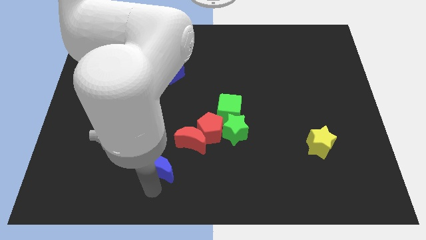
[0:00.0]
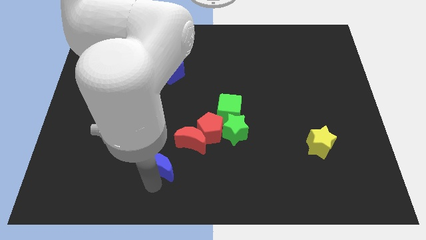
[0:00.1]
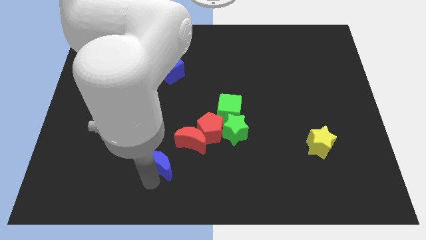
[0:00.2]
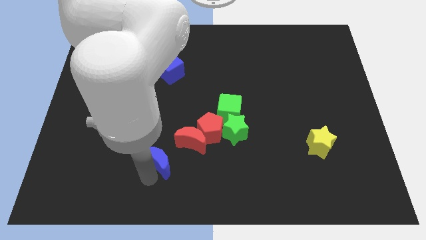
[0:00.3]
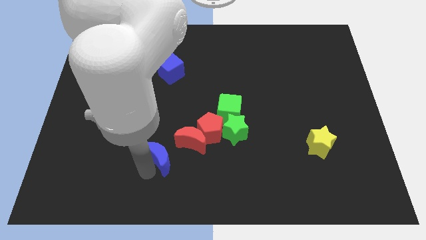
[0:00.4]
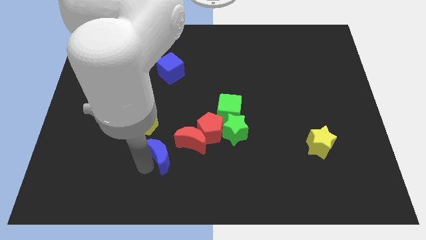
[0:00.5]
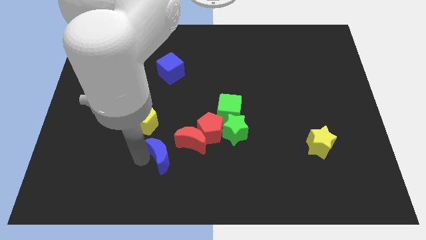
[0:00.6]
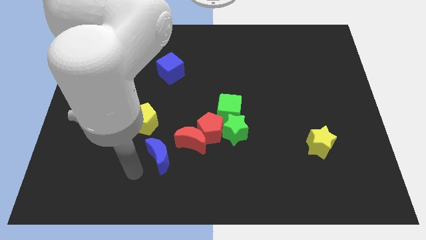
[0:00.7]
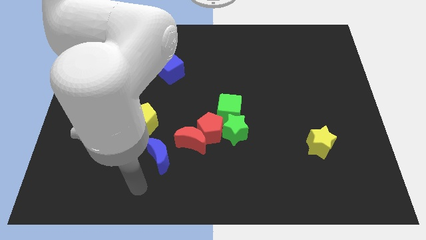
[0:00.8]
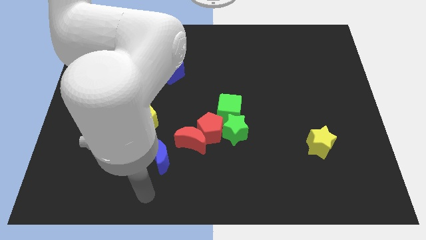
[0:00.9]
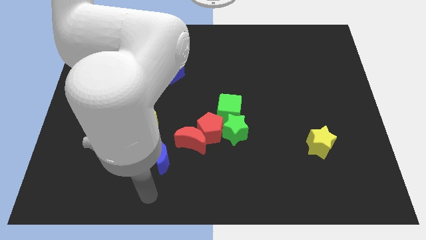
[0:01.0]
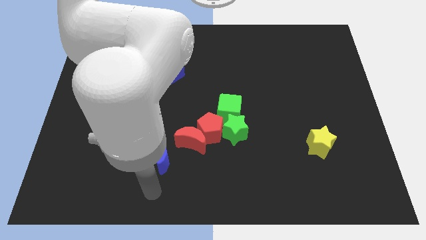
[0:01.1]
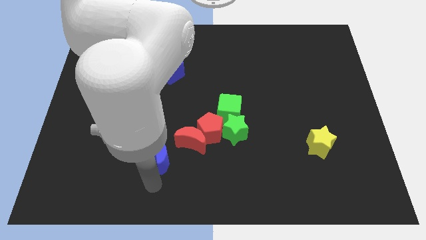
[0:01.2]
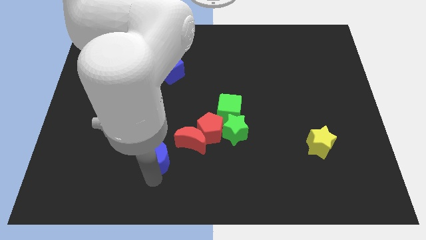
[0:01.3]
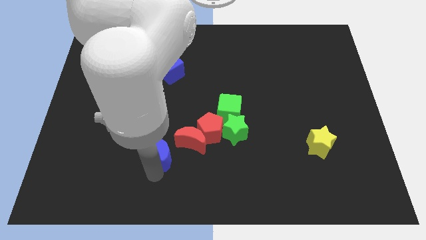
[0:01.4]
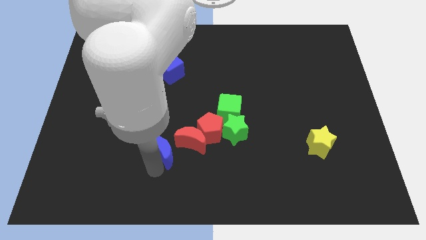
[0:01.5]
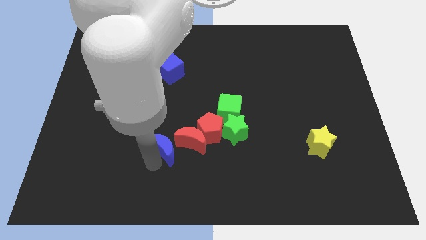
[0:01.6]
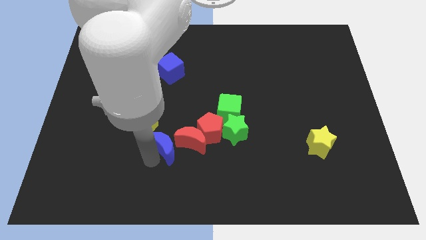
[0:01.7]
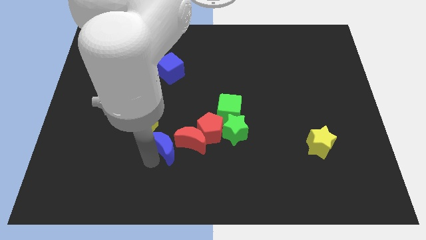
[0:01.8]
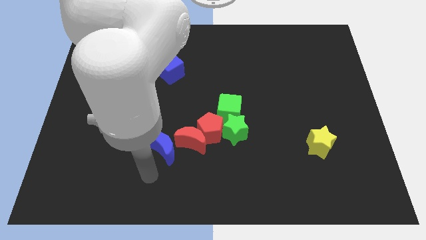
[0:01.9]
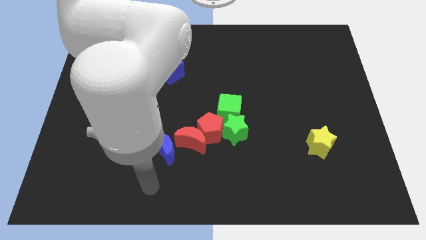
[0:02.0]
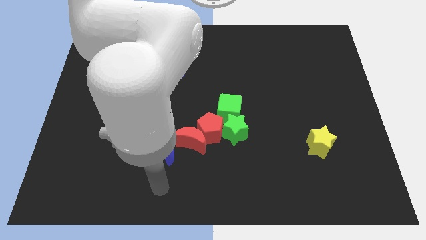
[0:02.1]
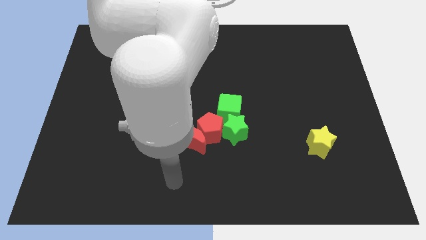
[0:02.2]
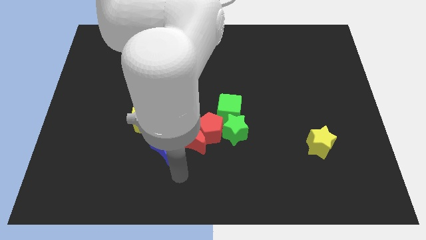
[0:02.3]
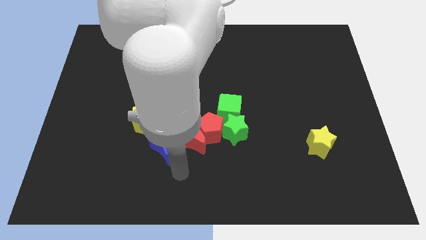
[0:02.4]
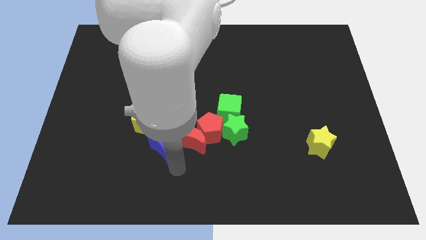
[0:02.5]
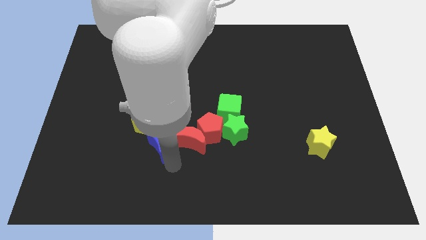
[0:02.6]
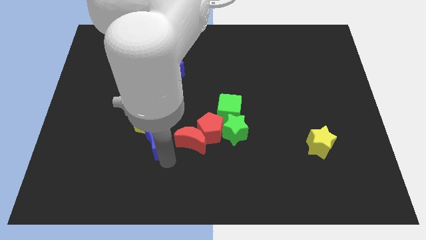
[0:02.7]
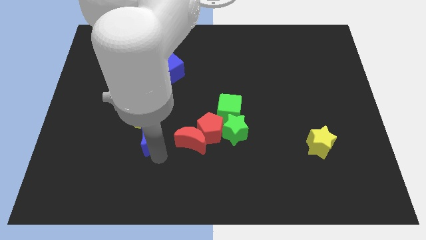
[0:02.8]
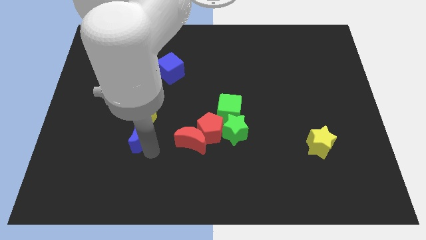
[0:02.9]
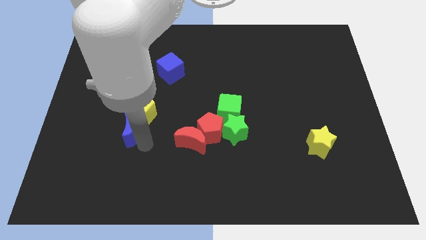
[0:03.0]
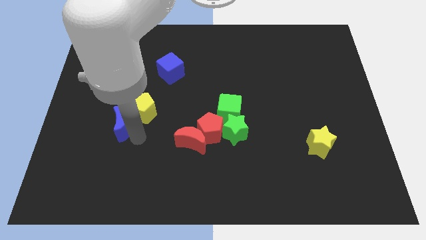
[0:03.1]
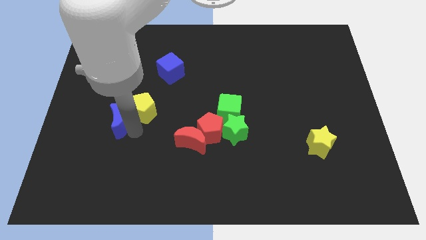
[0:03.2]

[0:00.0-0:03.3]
slide the blue moon into the yellow pentagon

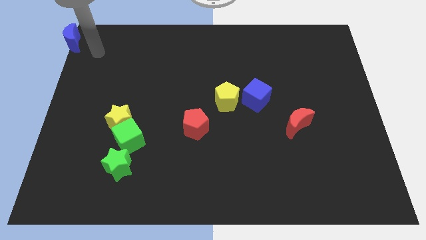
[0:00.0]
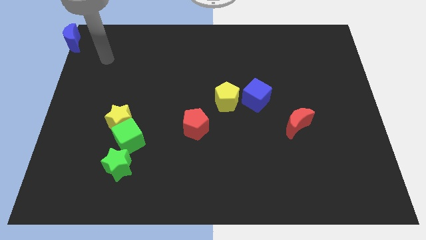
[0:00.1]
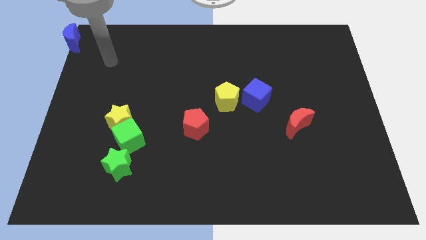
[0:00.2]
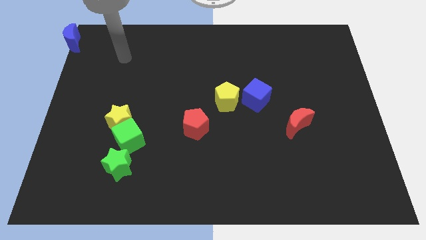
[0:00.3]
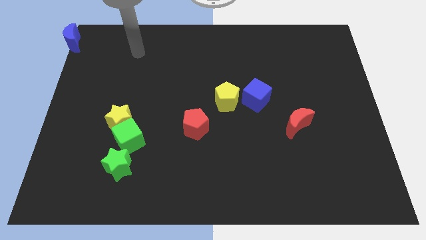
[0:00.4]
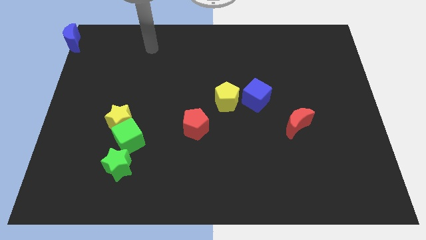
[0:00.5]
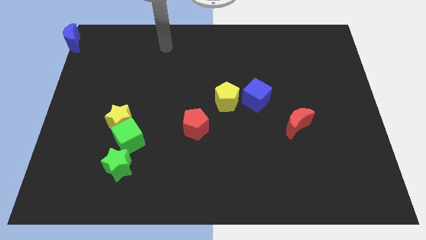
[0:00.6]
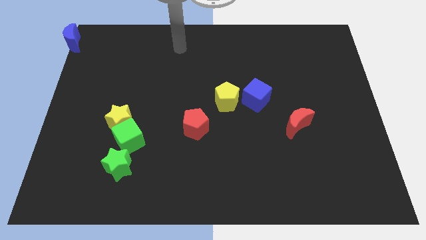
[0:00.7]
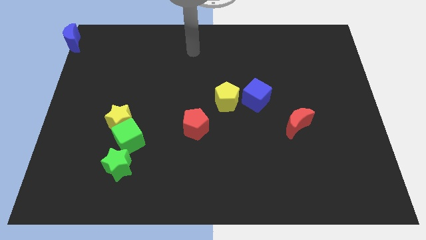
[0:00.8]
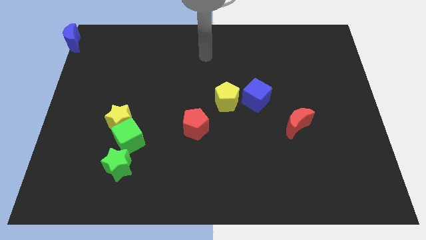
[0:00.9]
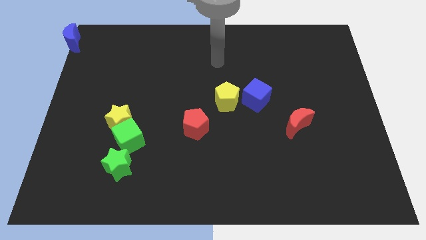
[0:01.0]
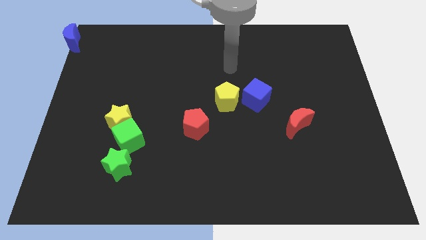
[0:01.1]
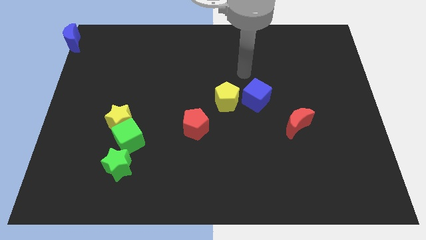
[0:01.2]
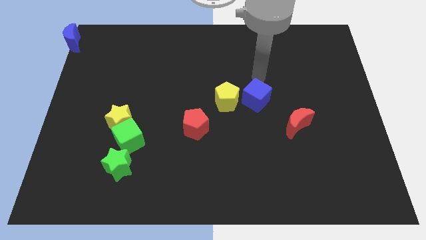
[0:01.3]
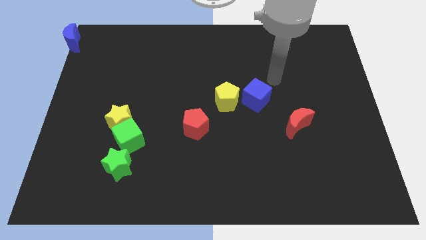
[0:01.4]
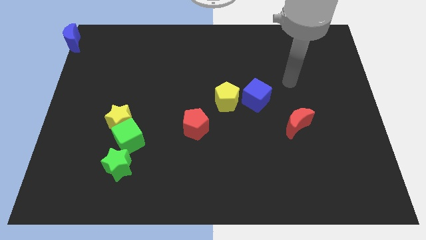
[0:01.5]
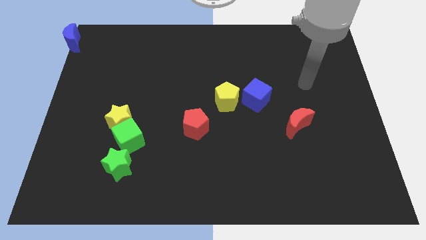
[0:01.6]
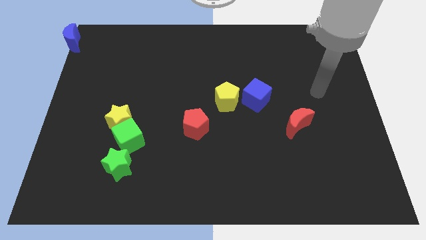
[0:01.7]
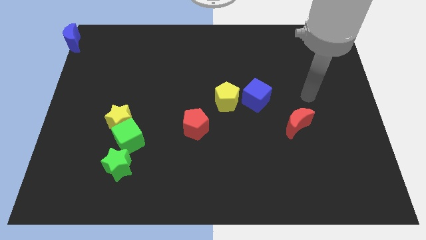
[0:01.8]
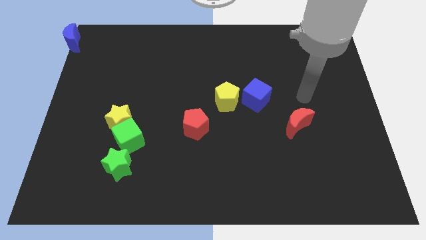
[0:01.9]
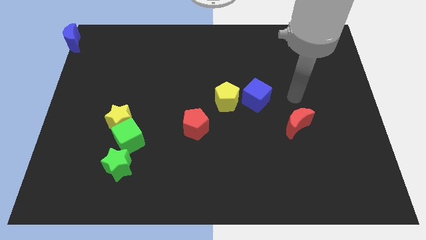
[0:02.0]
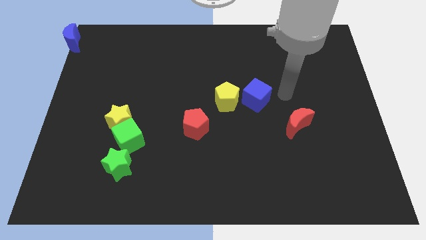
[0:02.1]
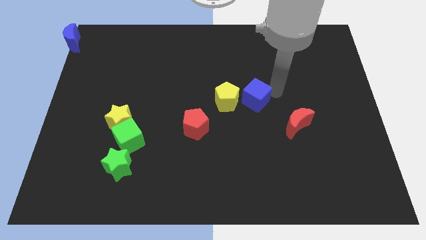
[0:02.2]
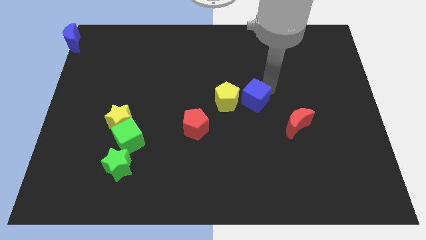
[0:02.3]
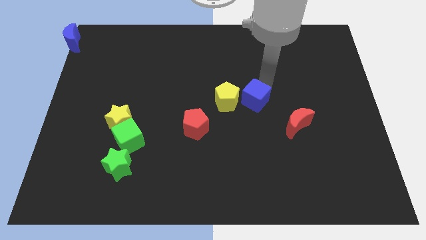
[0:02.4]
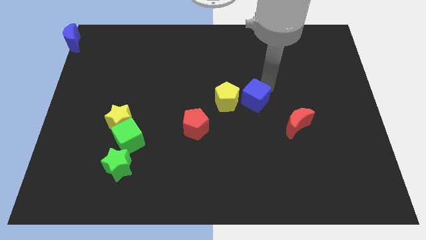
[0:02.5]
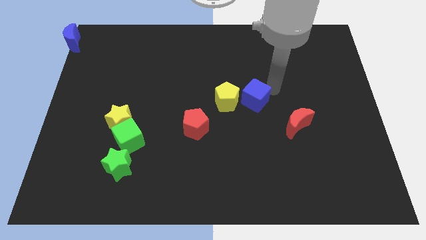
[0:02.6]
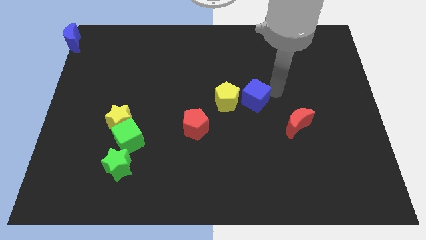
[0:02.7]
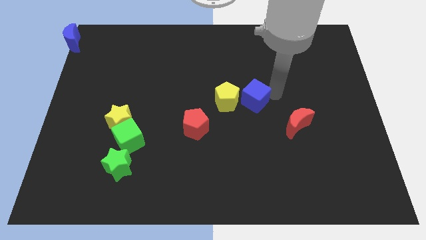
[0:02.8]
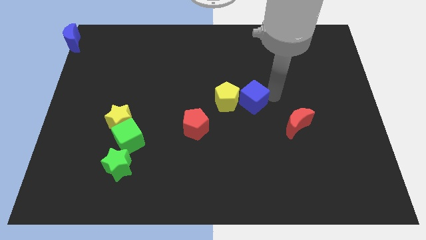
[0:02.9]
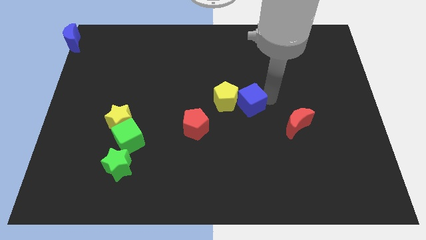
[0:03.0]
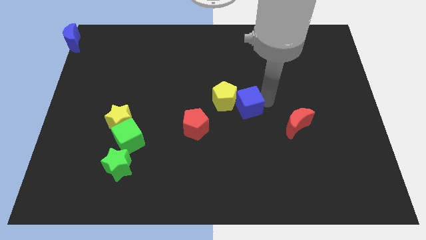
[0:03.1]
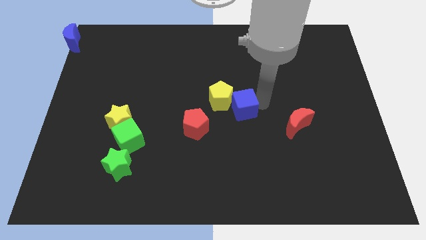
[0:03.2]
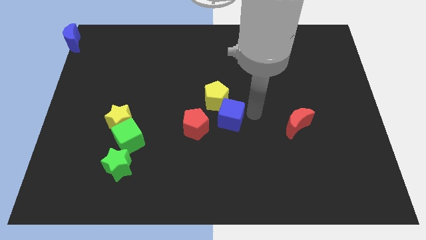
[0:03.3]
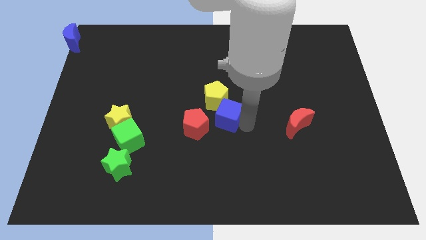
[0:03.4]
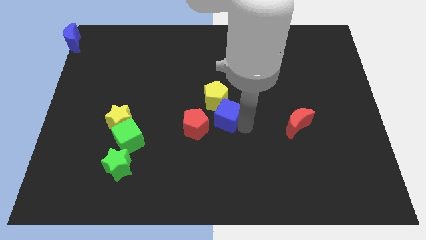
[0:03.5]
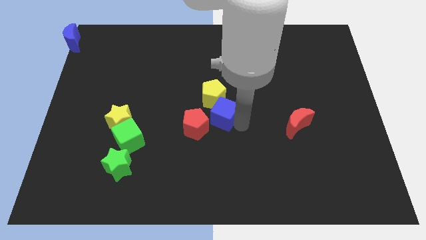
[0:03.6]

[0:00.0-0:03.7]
push the blue cube towards the center of the board

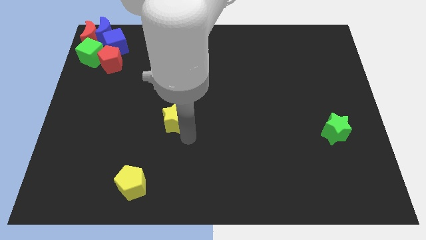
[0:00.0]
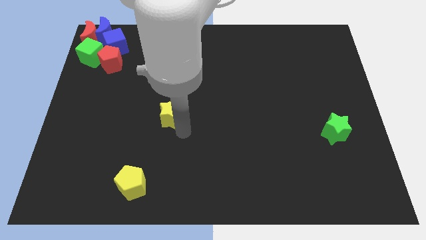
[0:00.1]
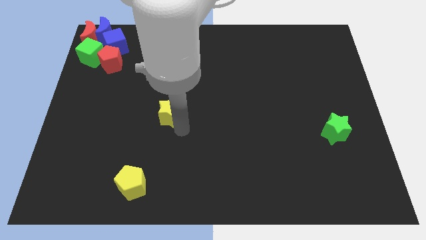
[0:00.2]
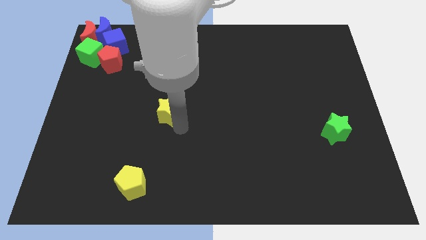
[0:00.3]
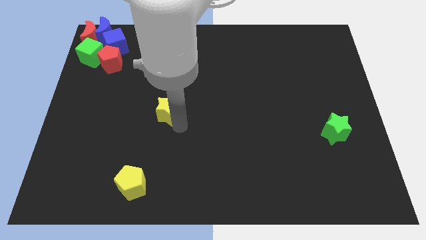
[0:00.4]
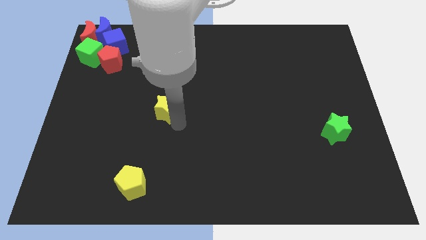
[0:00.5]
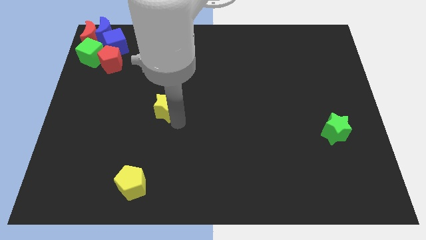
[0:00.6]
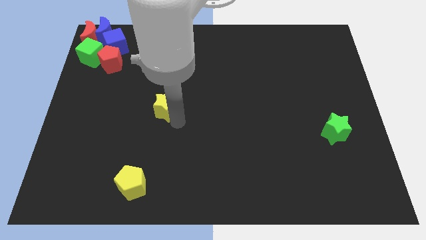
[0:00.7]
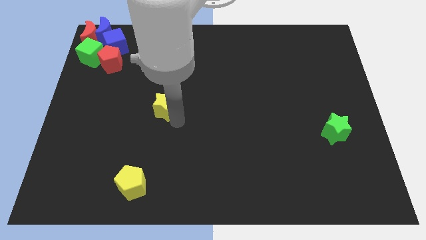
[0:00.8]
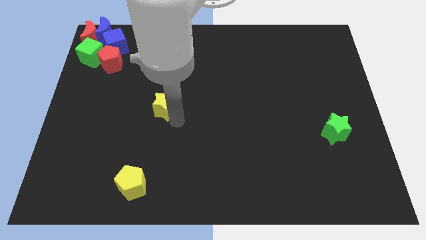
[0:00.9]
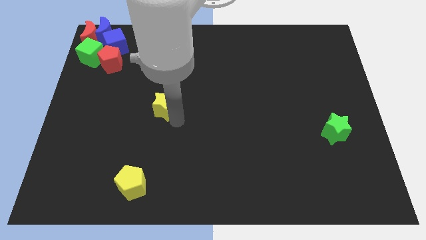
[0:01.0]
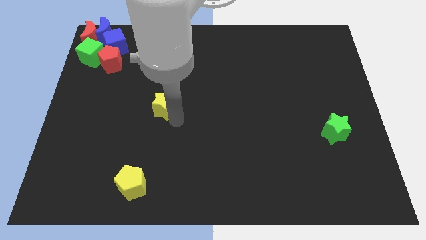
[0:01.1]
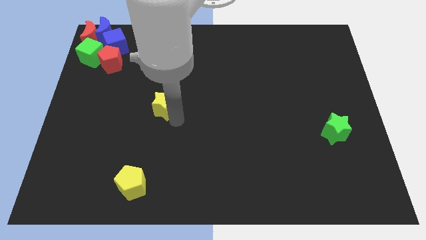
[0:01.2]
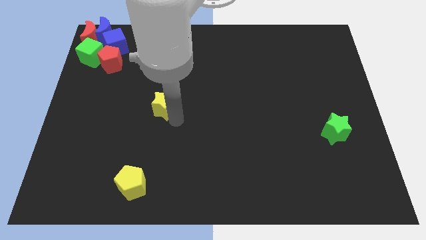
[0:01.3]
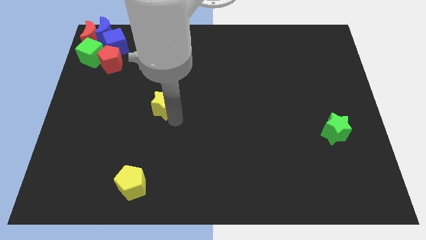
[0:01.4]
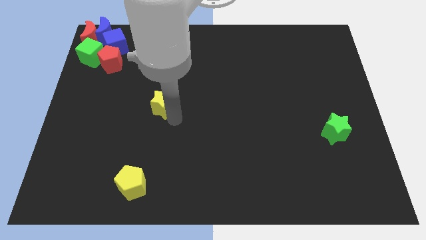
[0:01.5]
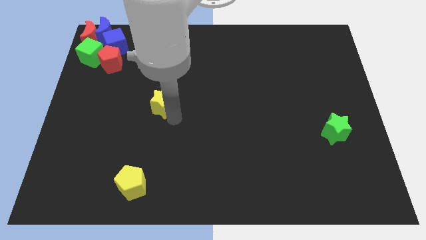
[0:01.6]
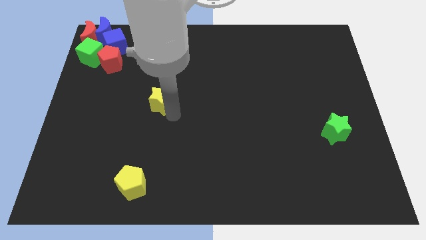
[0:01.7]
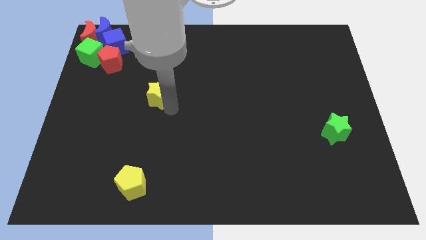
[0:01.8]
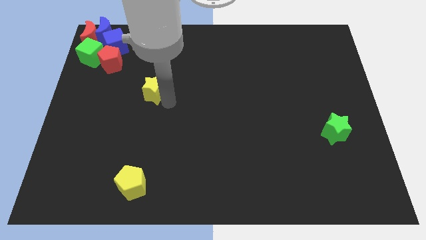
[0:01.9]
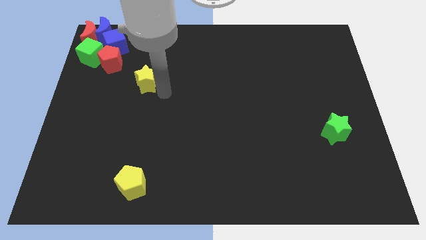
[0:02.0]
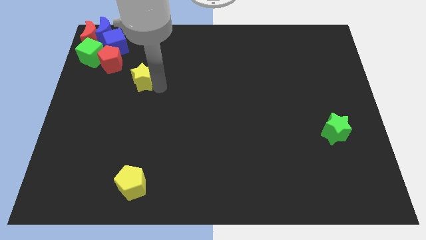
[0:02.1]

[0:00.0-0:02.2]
drag the yellow star to the up
